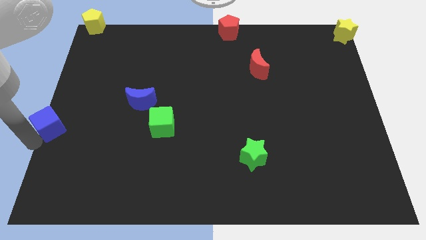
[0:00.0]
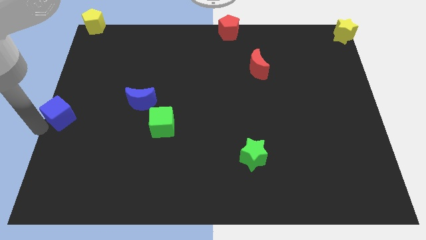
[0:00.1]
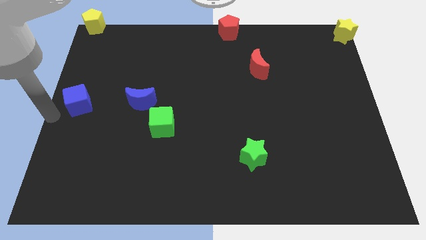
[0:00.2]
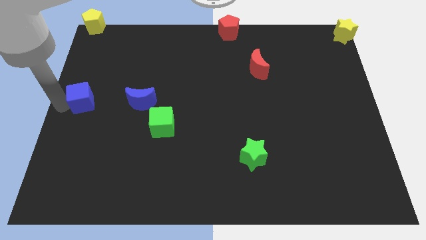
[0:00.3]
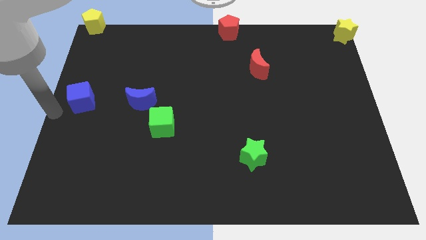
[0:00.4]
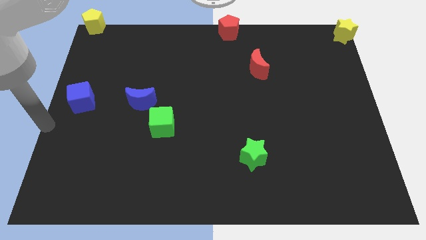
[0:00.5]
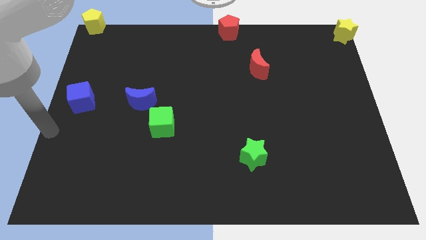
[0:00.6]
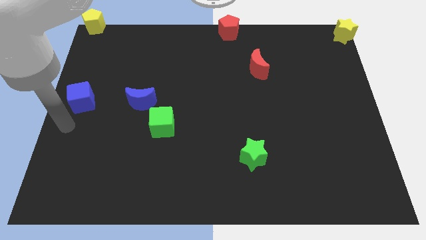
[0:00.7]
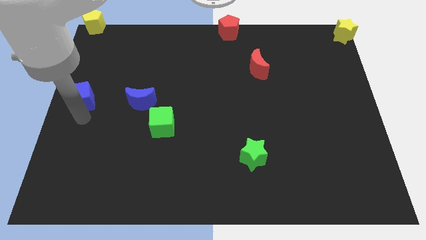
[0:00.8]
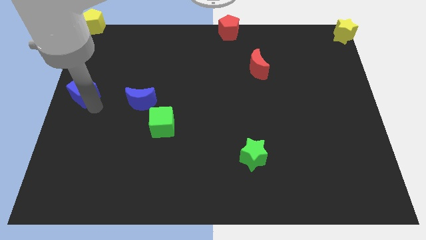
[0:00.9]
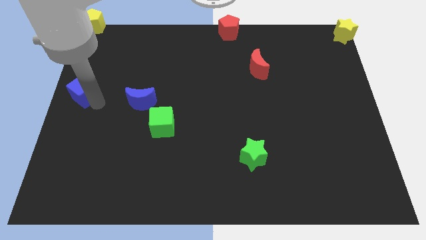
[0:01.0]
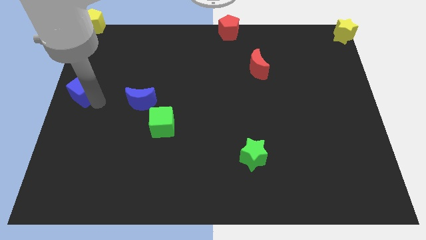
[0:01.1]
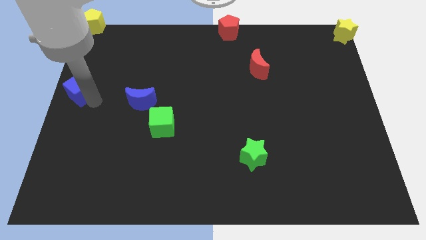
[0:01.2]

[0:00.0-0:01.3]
place blue cube below yellow pentagon

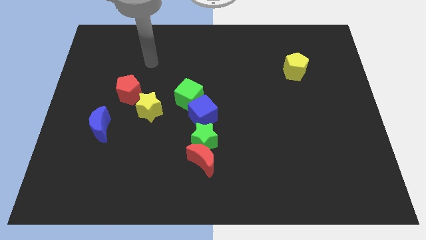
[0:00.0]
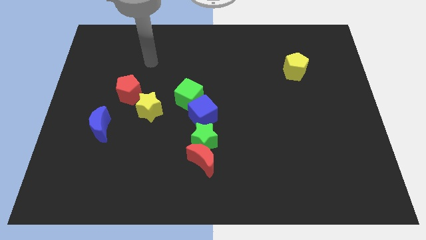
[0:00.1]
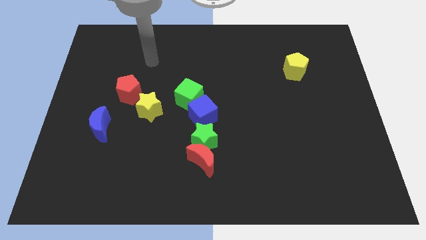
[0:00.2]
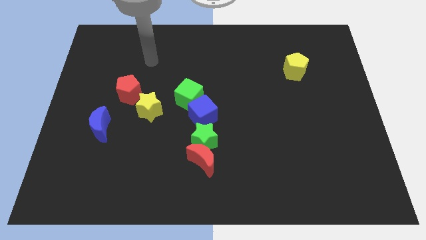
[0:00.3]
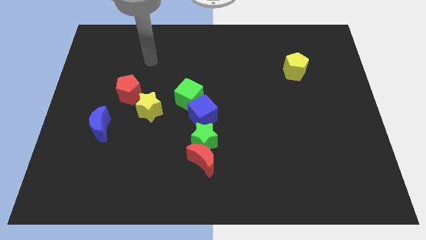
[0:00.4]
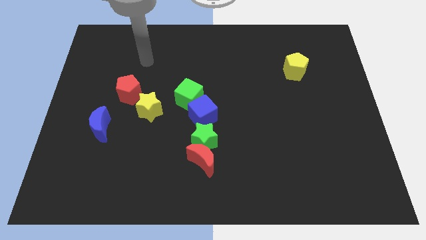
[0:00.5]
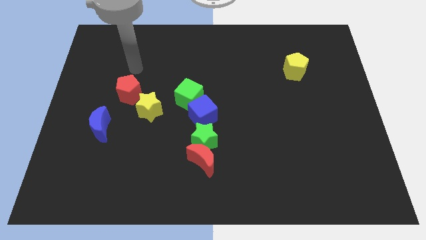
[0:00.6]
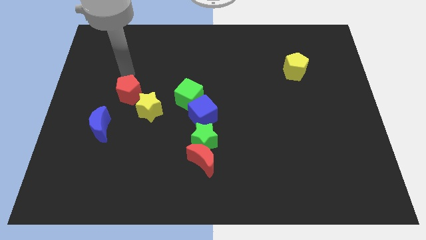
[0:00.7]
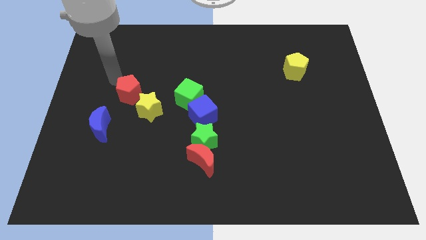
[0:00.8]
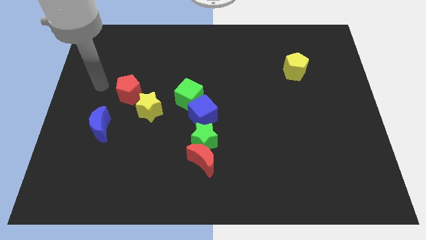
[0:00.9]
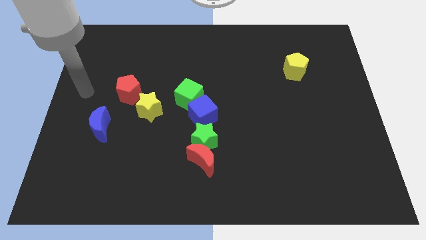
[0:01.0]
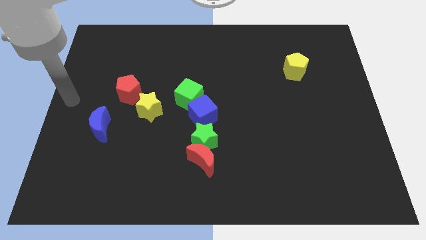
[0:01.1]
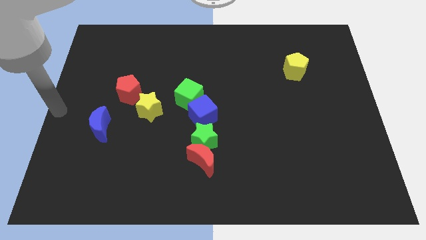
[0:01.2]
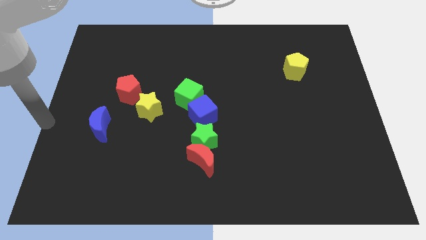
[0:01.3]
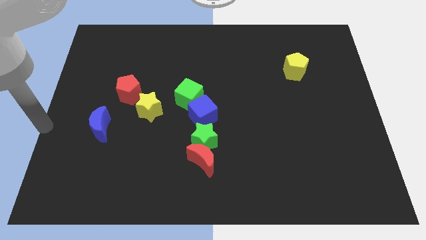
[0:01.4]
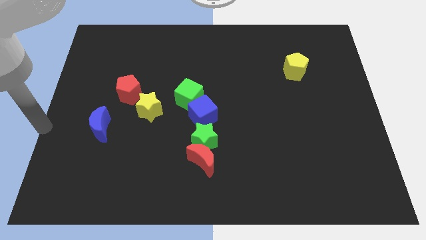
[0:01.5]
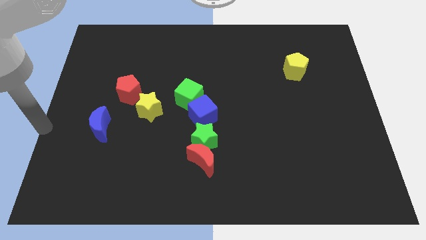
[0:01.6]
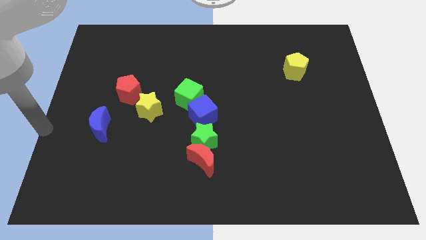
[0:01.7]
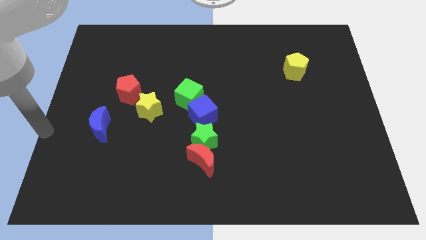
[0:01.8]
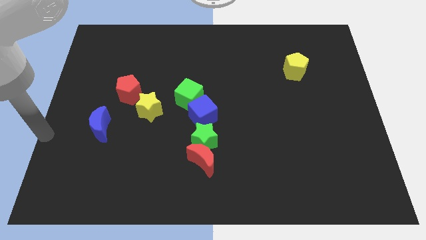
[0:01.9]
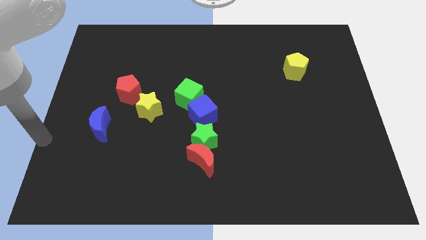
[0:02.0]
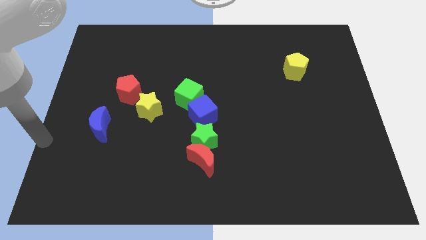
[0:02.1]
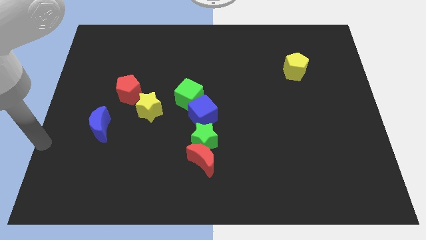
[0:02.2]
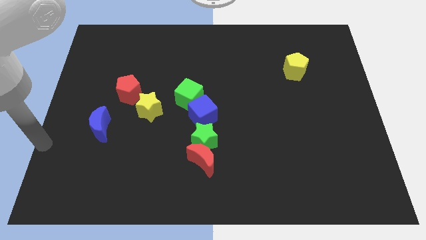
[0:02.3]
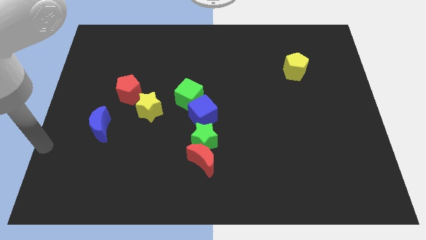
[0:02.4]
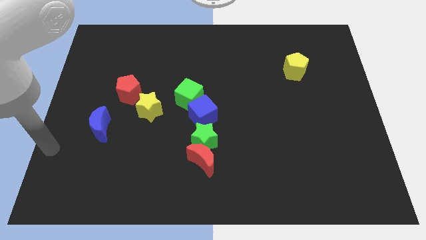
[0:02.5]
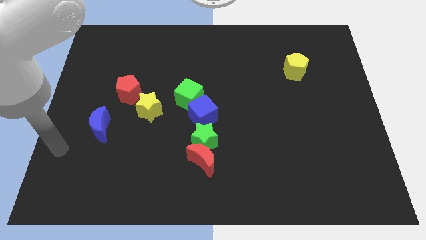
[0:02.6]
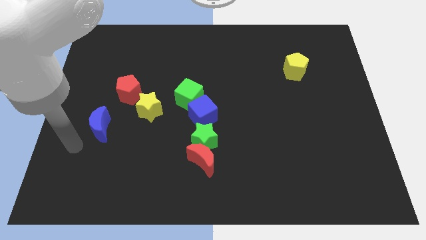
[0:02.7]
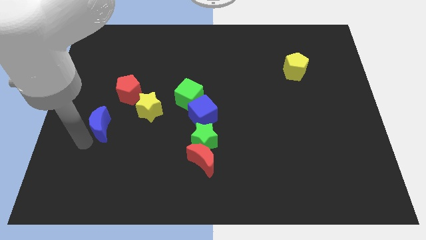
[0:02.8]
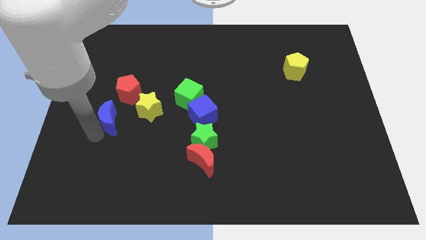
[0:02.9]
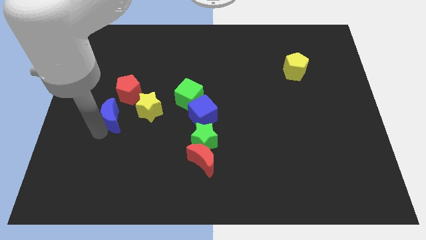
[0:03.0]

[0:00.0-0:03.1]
place your arm to the left of blue moon

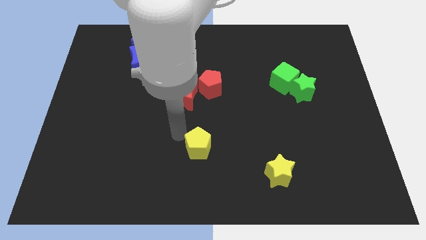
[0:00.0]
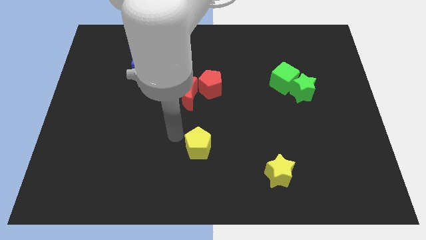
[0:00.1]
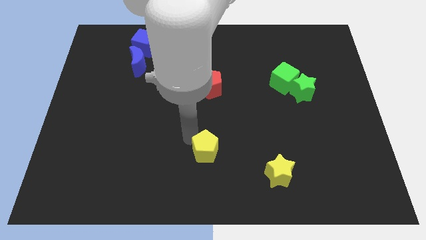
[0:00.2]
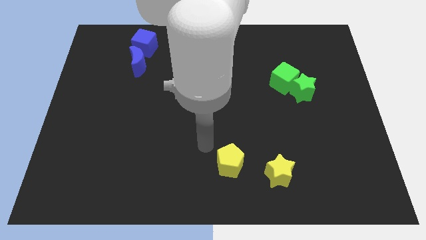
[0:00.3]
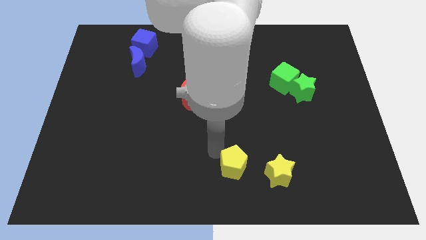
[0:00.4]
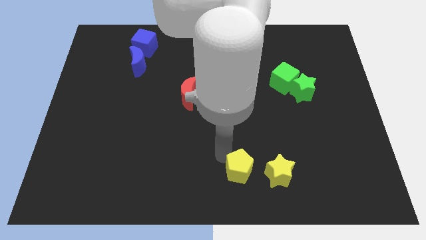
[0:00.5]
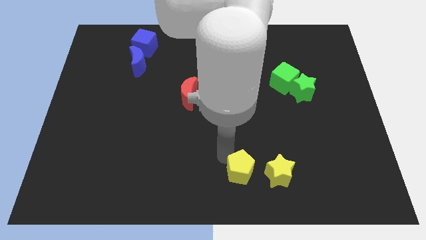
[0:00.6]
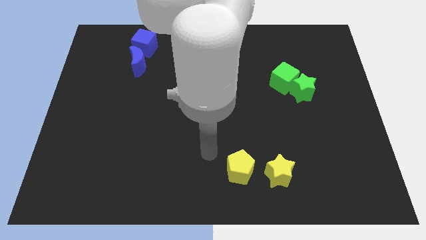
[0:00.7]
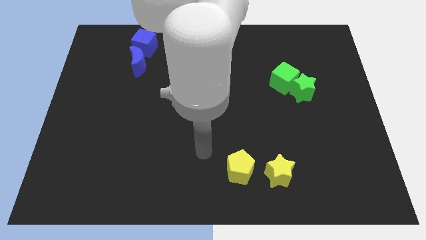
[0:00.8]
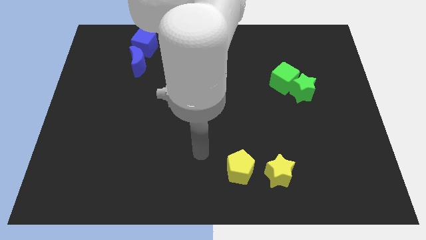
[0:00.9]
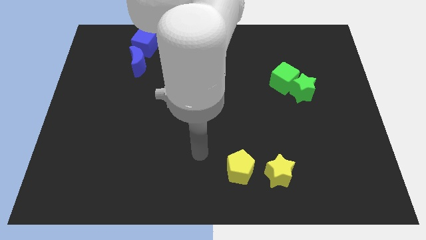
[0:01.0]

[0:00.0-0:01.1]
push the yellow pentagon near to the yellow star

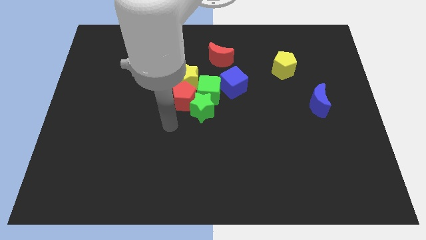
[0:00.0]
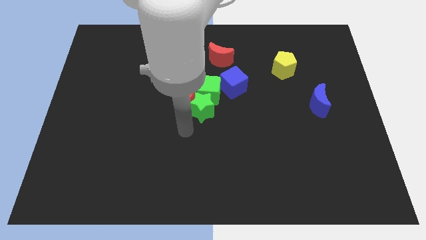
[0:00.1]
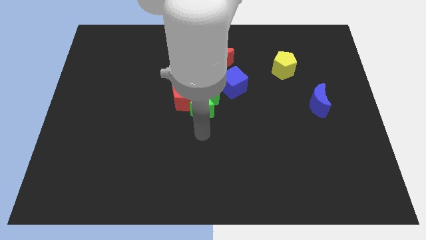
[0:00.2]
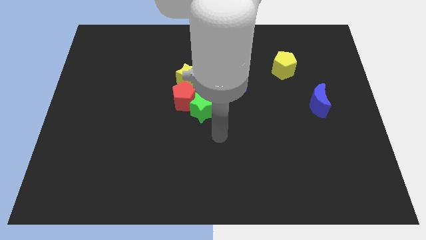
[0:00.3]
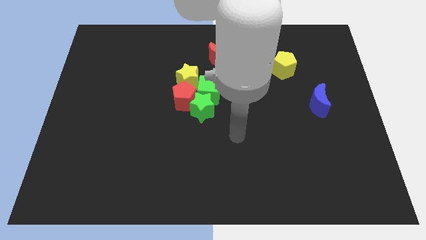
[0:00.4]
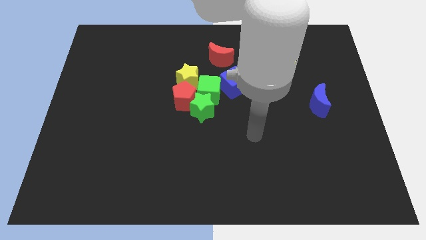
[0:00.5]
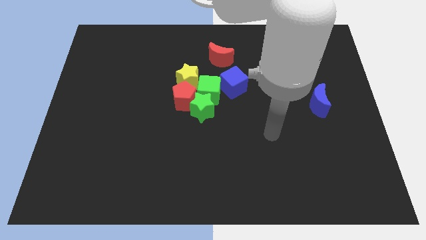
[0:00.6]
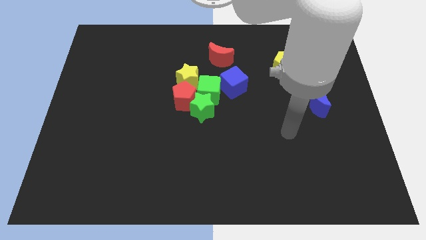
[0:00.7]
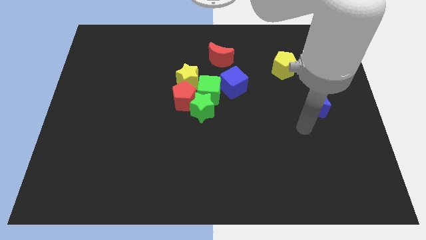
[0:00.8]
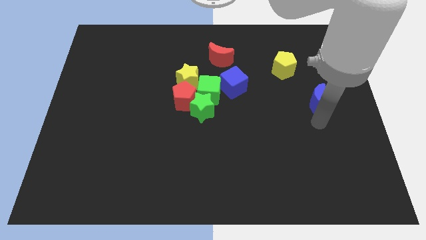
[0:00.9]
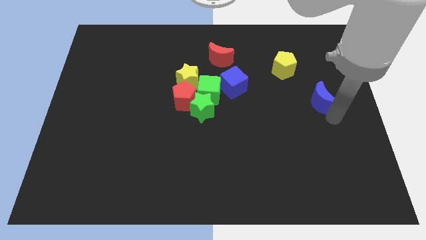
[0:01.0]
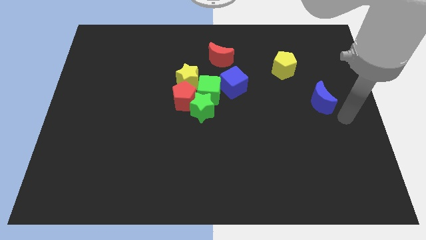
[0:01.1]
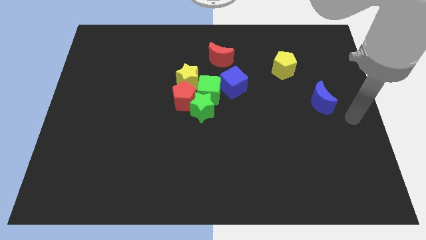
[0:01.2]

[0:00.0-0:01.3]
touch the bottom of the blue moon

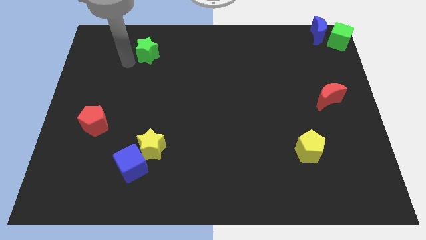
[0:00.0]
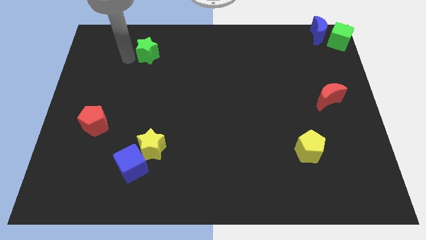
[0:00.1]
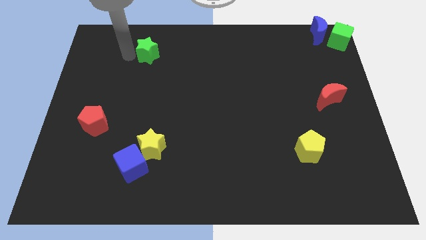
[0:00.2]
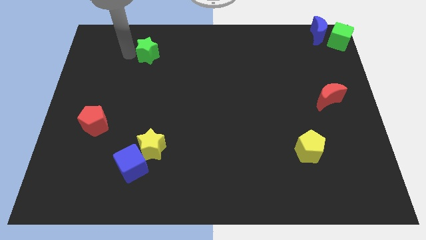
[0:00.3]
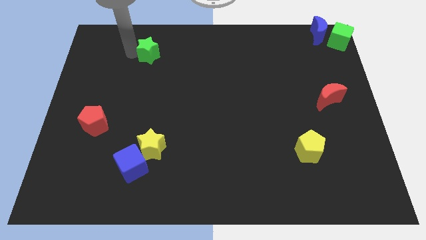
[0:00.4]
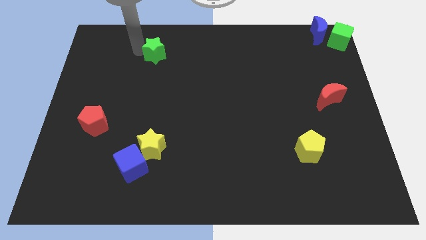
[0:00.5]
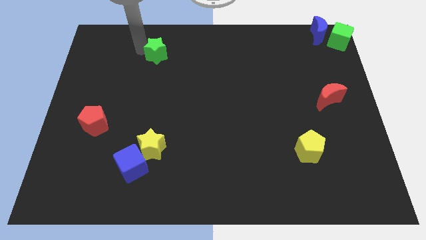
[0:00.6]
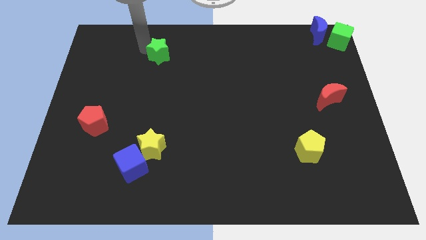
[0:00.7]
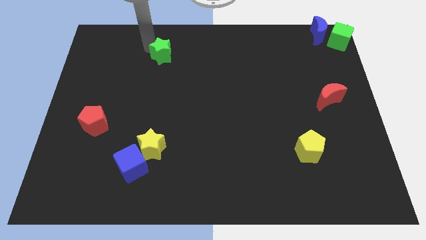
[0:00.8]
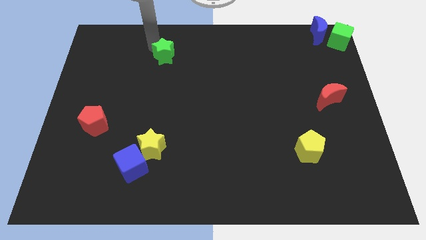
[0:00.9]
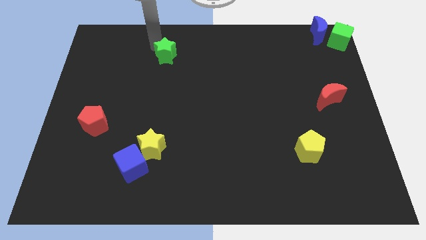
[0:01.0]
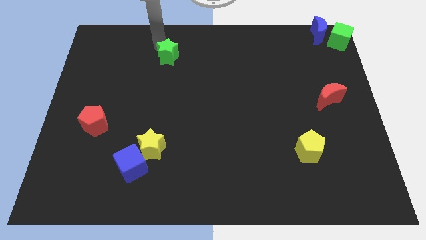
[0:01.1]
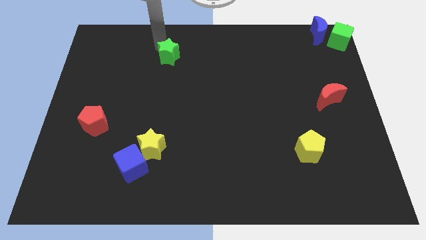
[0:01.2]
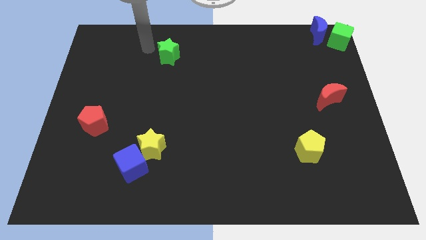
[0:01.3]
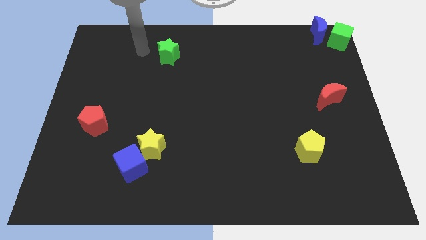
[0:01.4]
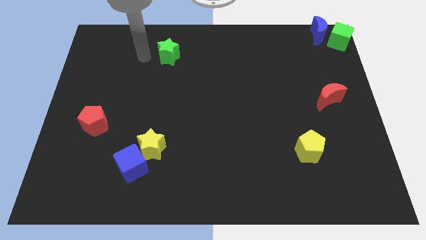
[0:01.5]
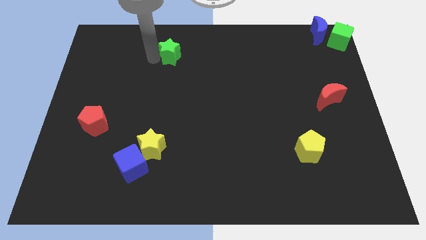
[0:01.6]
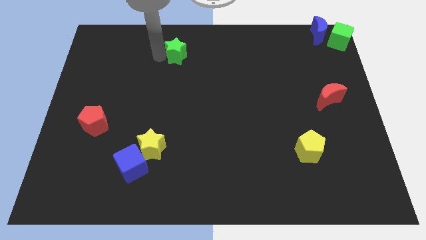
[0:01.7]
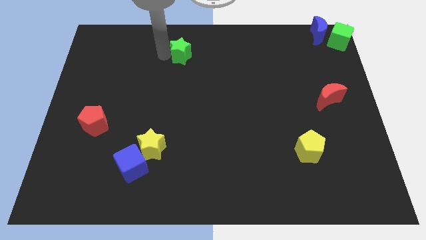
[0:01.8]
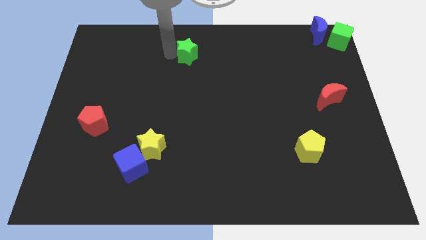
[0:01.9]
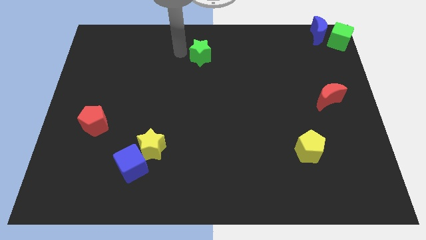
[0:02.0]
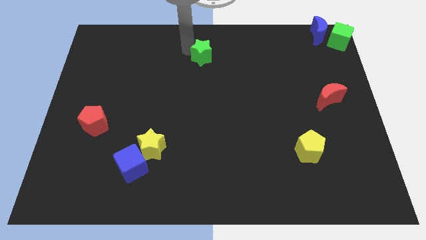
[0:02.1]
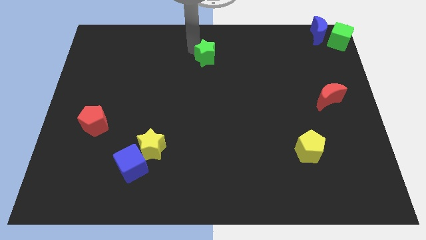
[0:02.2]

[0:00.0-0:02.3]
push the green star to the top center
